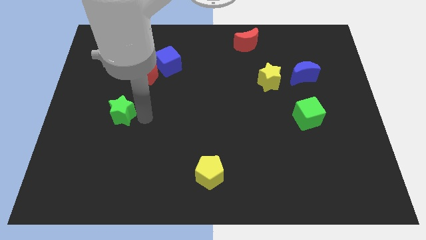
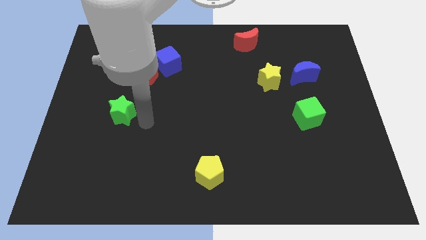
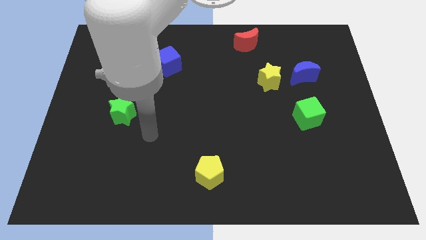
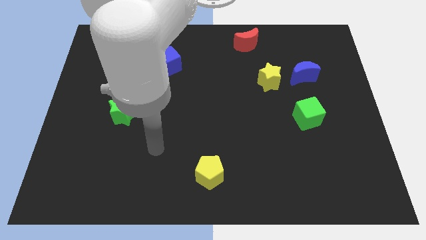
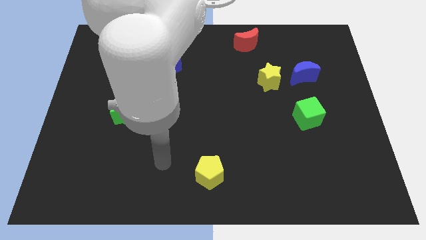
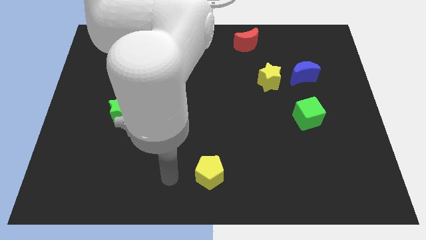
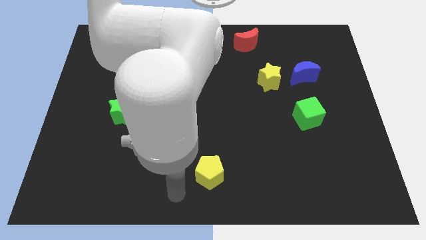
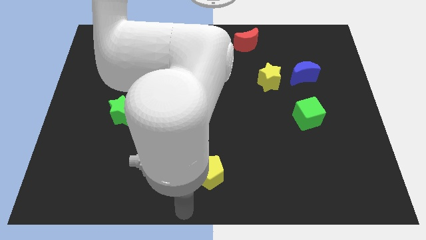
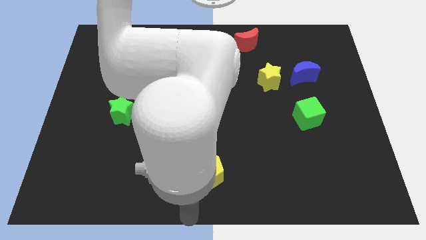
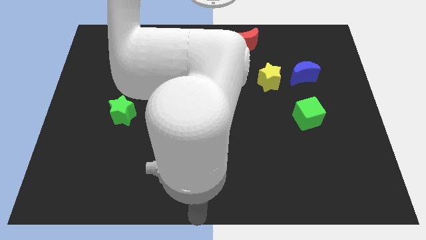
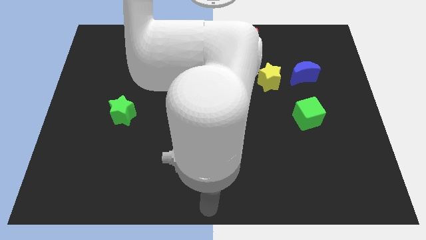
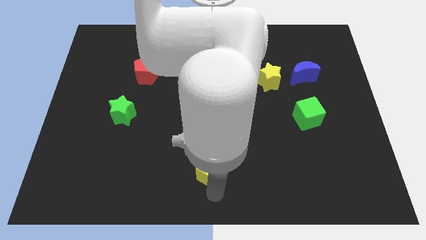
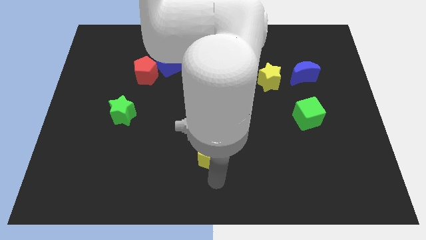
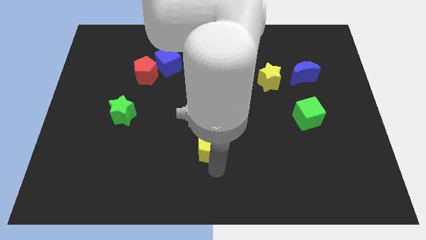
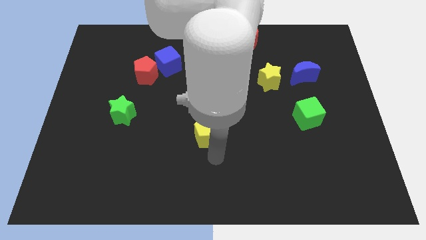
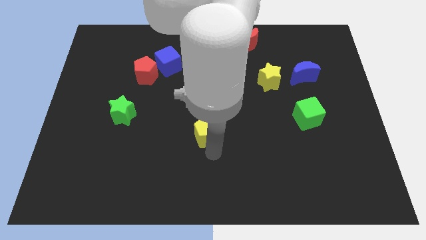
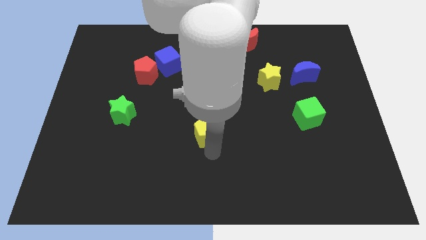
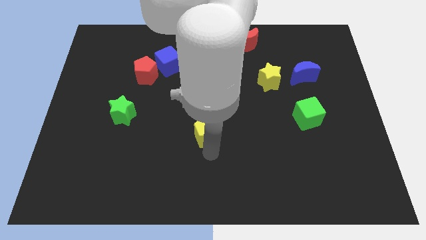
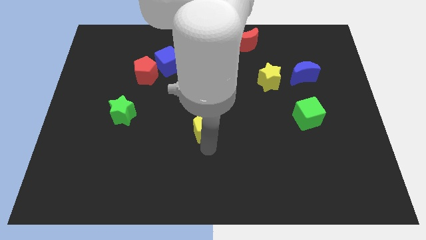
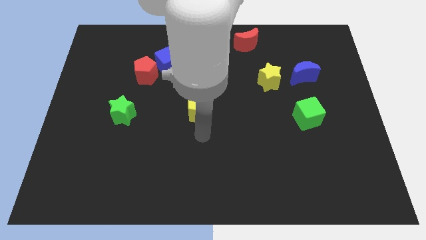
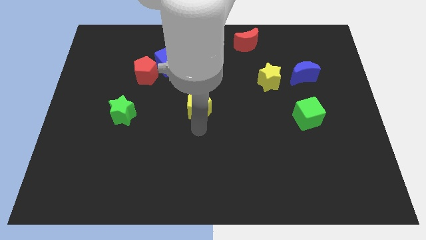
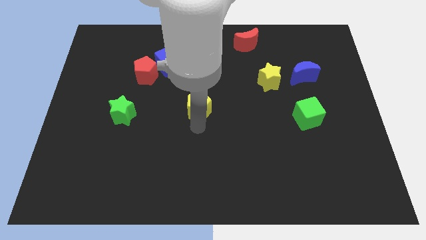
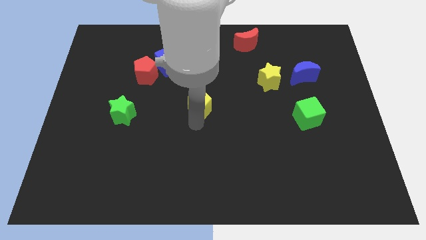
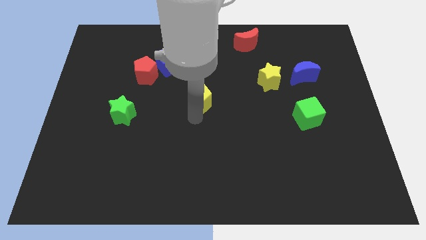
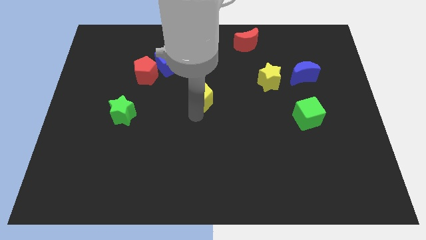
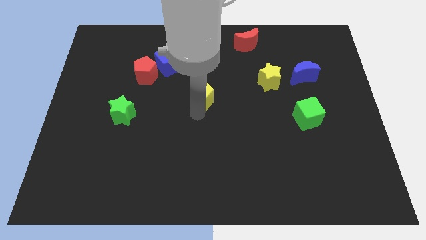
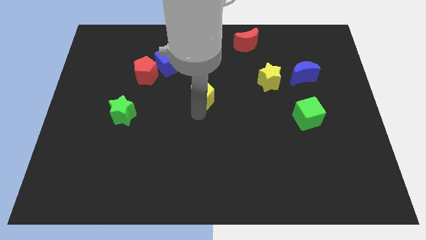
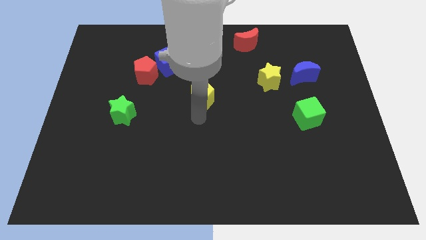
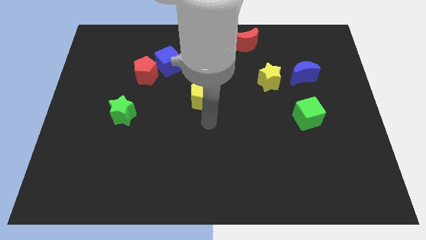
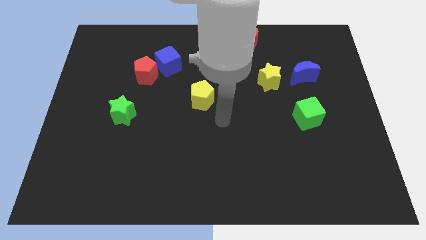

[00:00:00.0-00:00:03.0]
place the yellow pentagon in between the green and the yellow stars

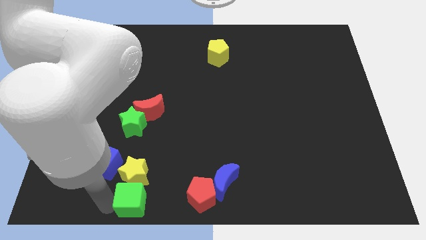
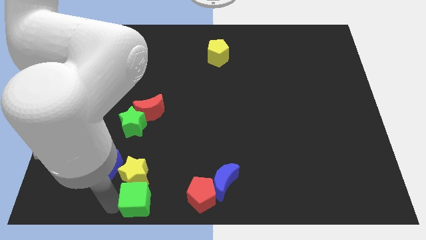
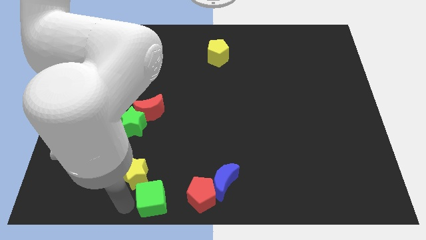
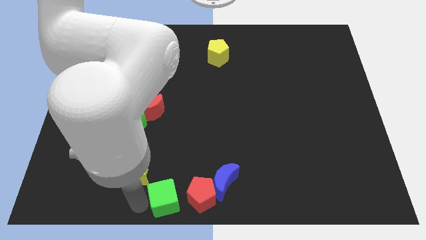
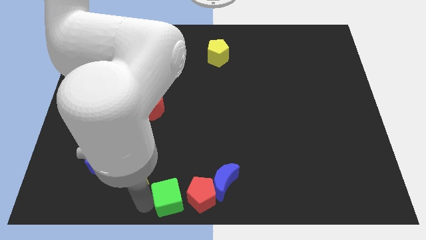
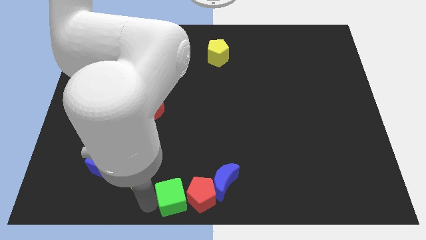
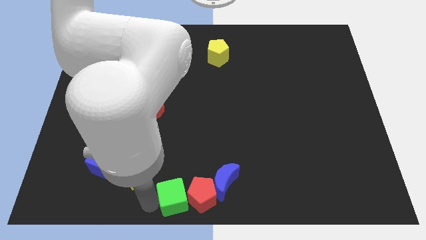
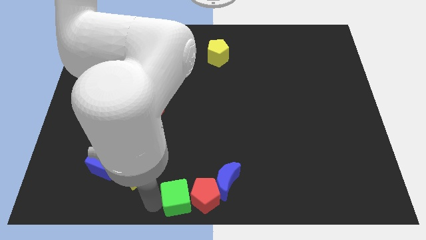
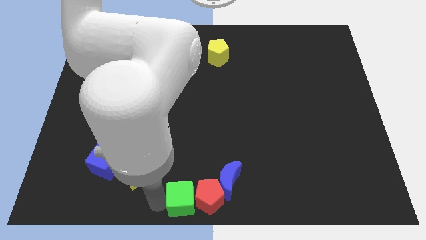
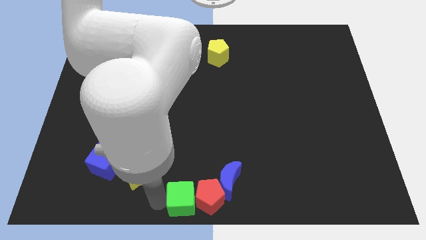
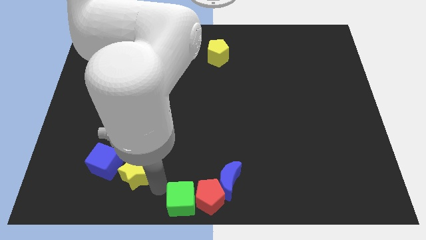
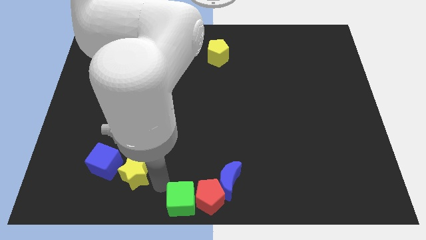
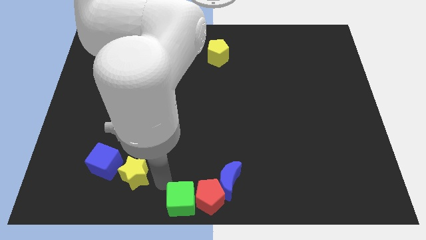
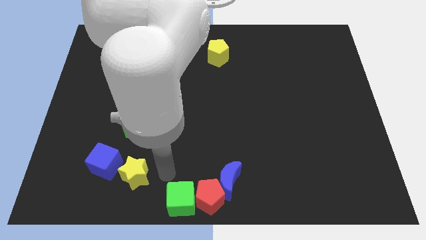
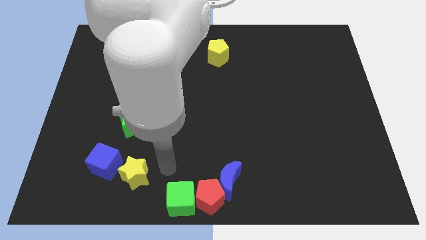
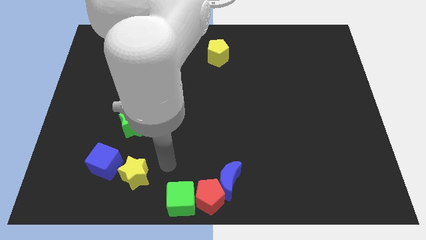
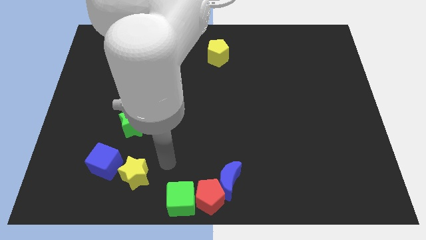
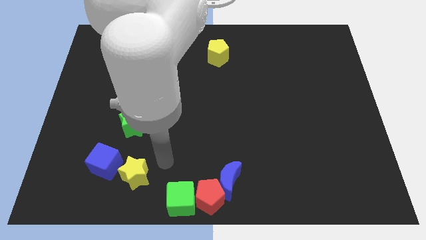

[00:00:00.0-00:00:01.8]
move the green cube into the red pentagon

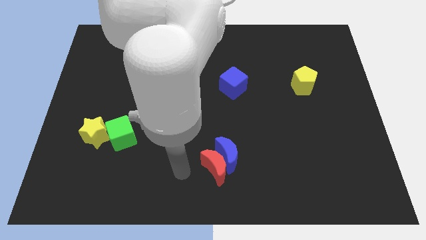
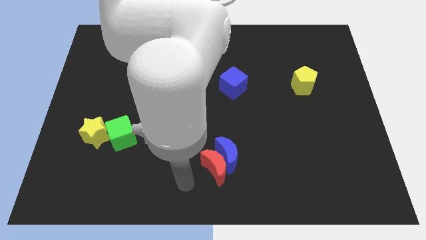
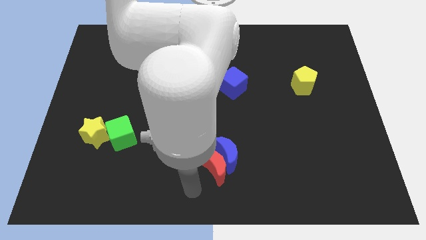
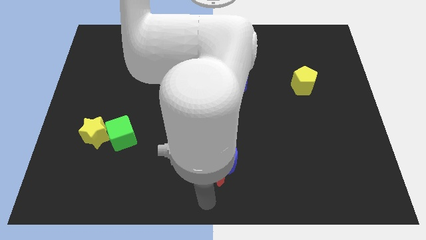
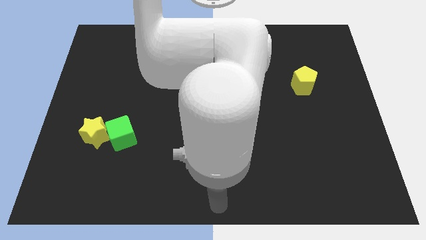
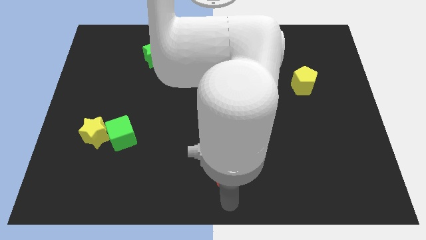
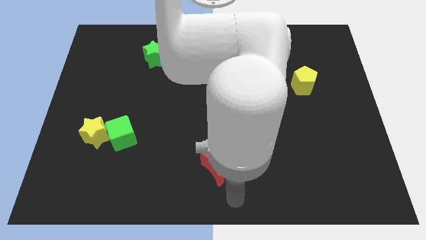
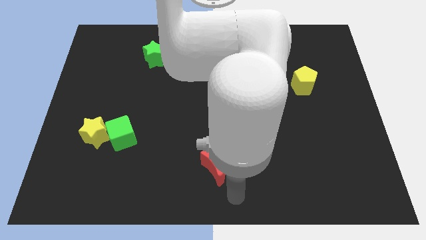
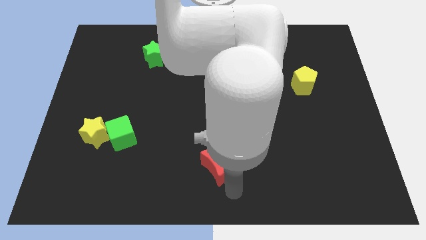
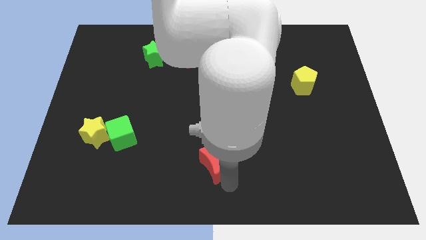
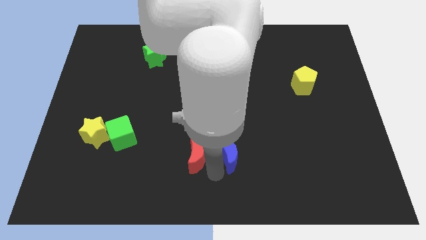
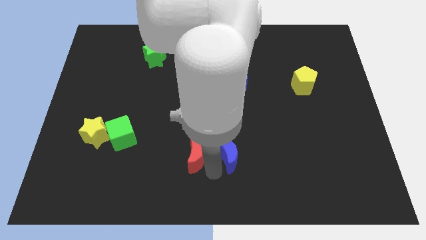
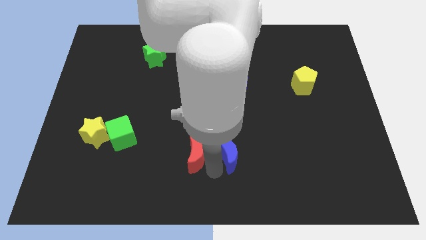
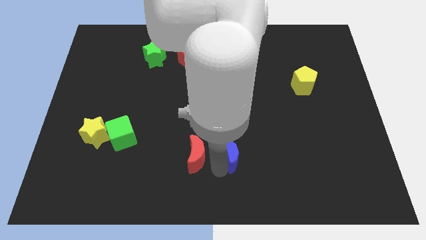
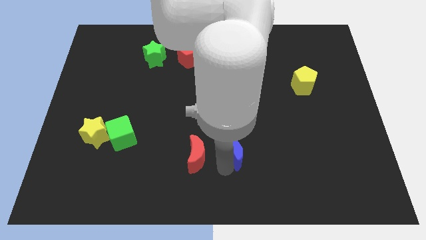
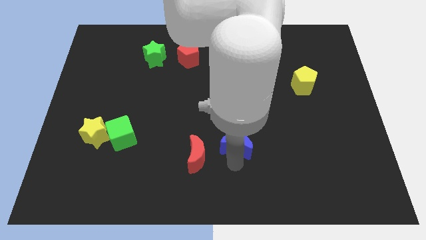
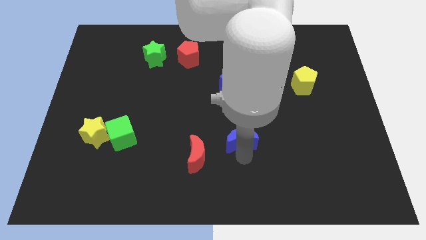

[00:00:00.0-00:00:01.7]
separate the red moon and blue moon

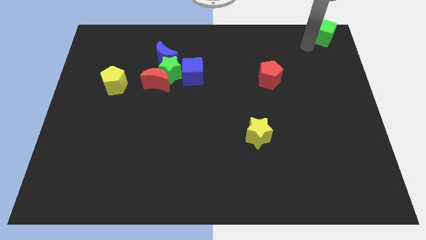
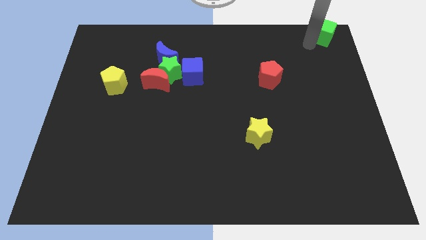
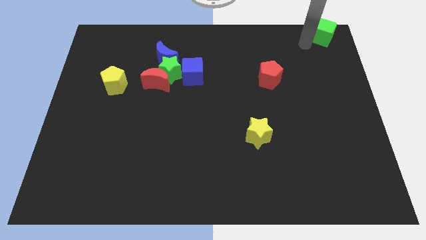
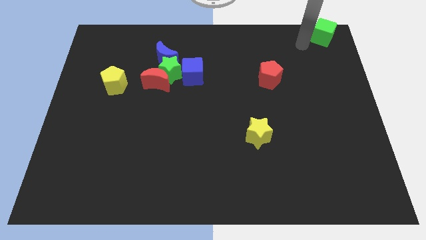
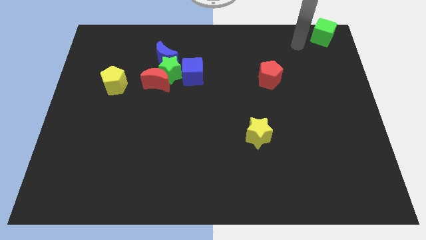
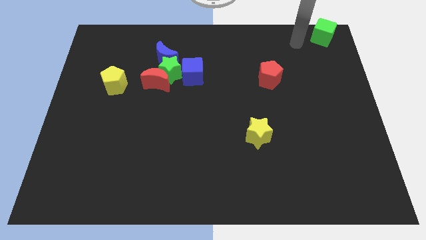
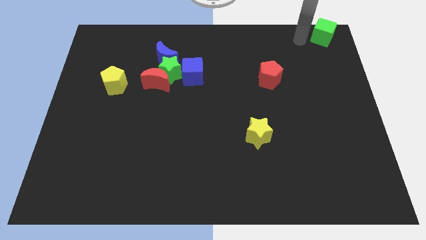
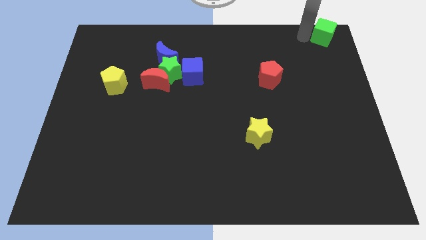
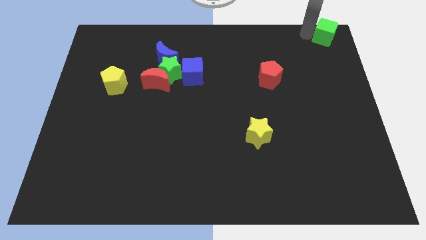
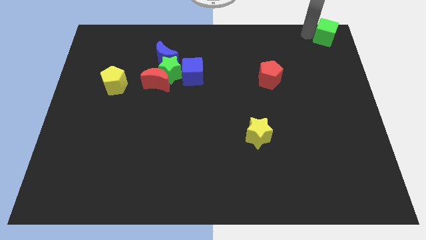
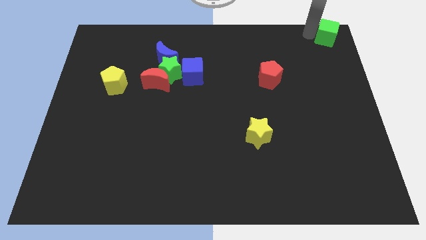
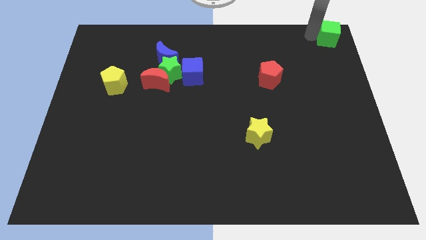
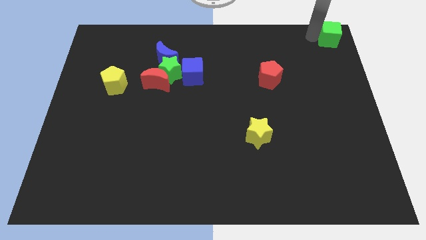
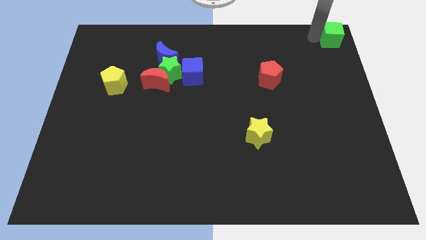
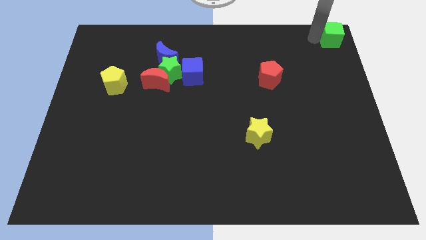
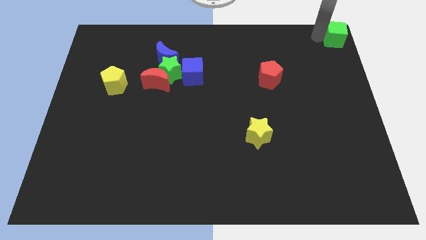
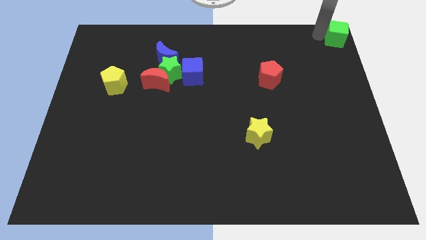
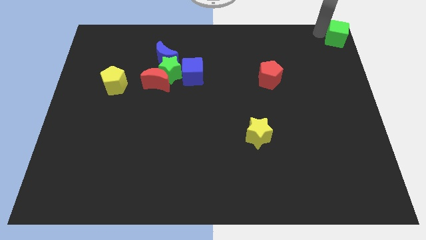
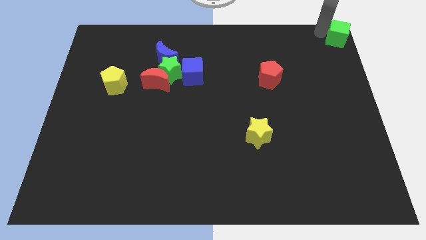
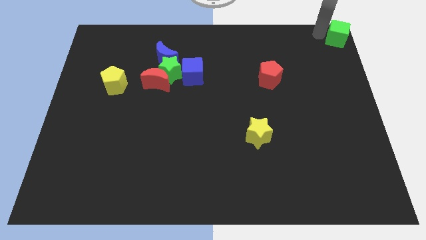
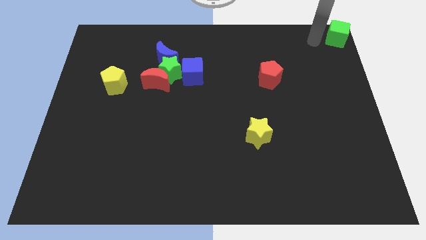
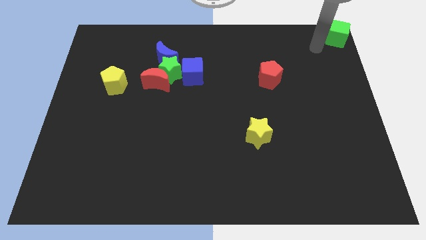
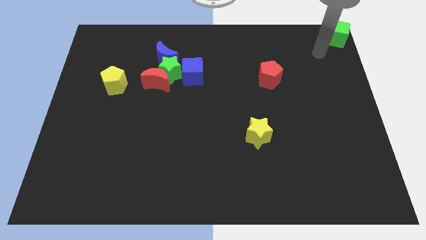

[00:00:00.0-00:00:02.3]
move the green cube to the top right

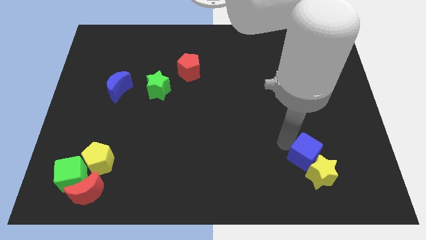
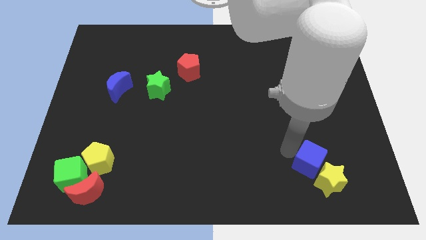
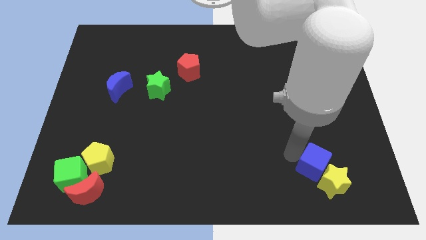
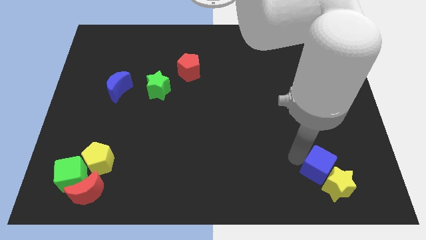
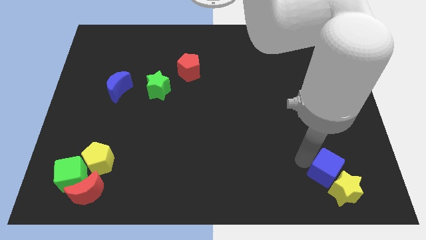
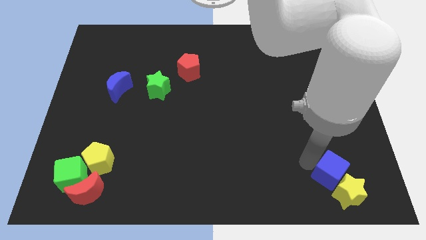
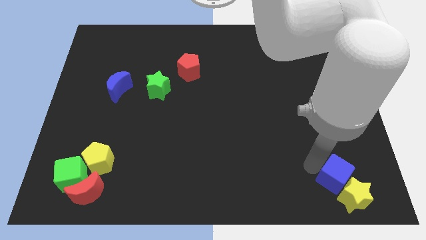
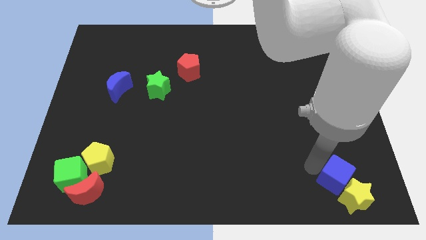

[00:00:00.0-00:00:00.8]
move the blue cube along with the yellow star to the bottom right corner
